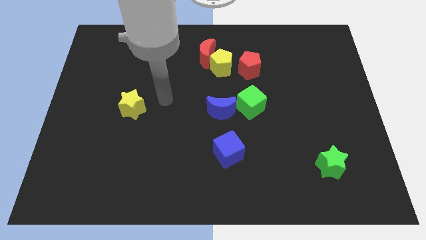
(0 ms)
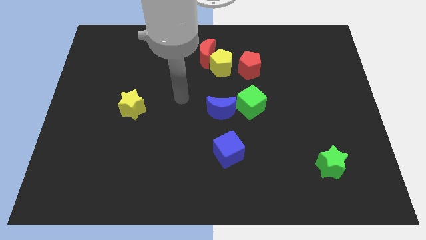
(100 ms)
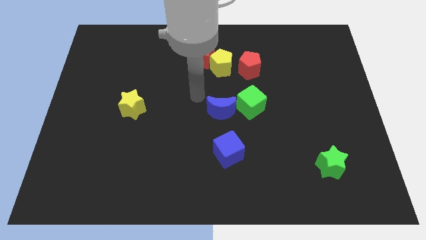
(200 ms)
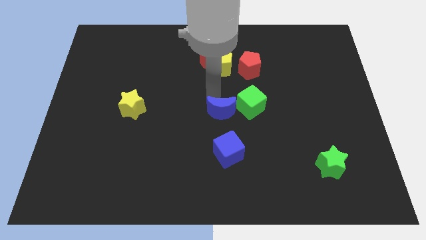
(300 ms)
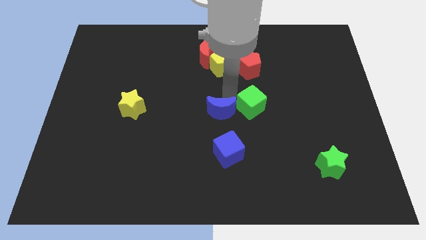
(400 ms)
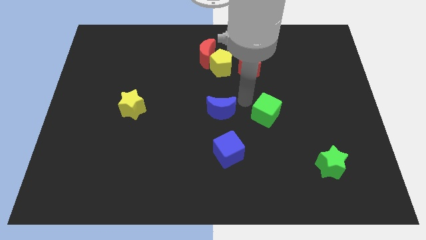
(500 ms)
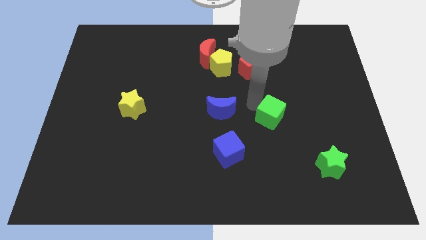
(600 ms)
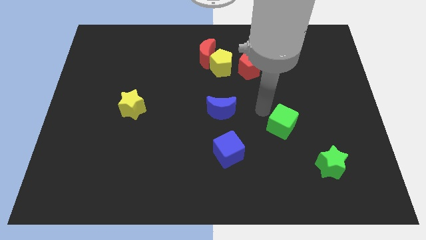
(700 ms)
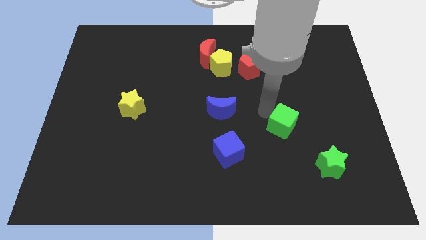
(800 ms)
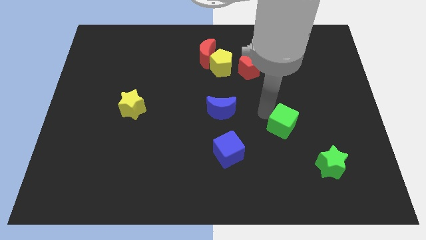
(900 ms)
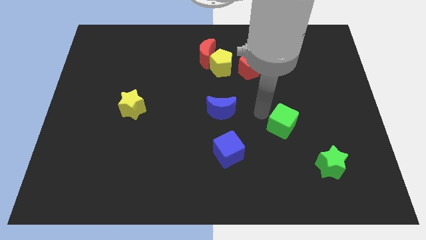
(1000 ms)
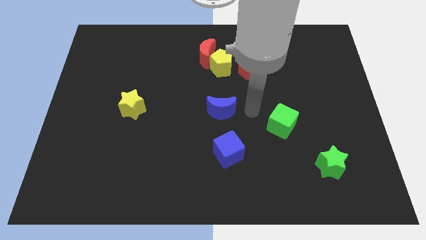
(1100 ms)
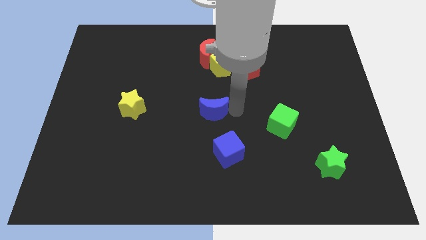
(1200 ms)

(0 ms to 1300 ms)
separate green cube with blue crescent

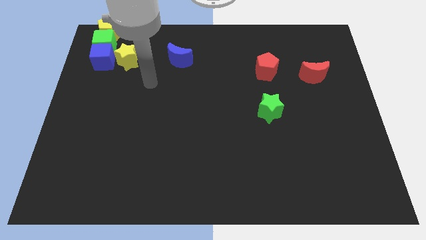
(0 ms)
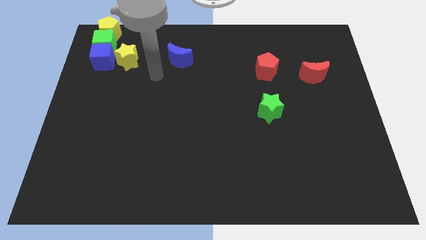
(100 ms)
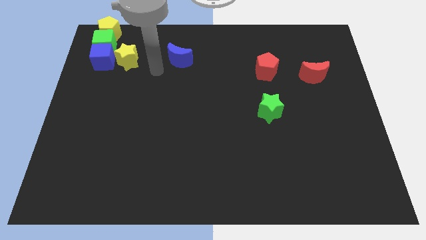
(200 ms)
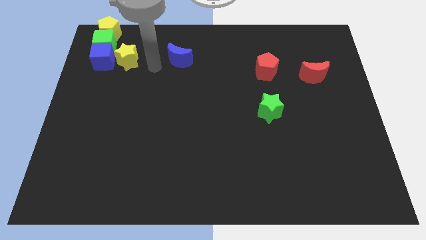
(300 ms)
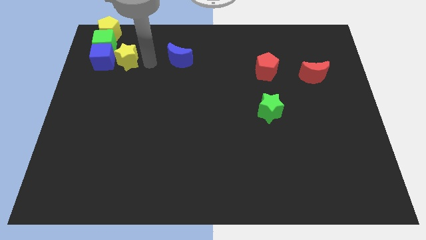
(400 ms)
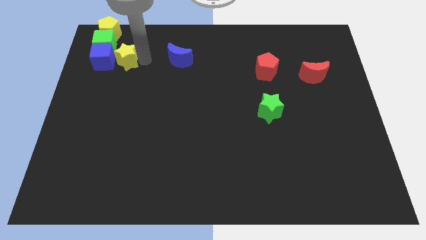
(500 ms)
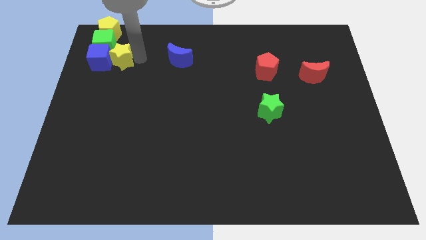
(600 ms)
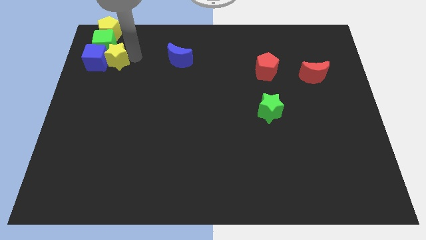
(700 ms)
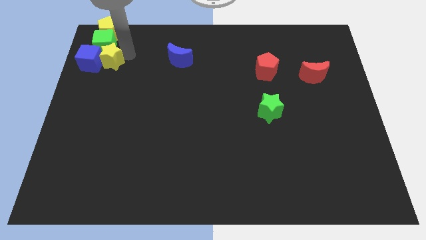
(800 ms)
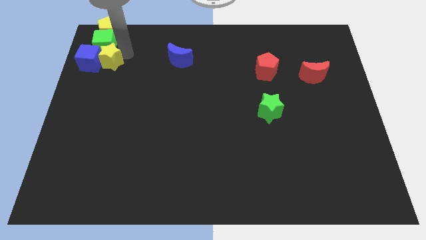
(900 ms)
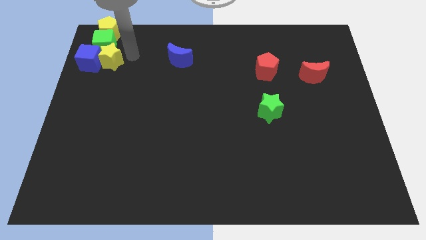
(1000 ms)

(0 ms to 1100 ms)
push the yellow star into the blue cube

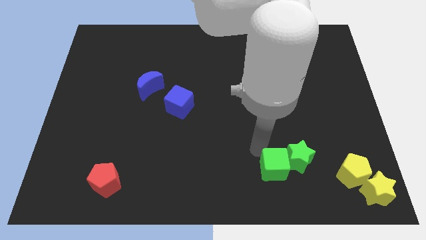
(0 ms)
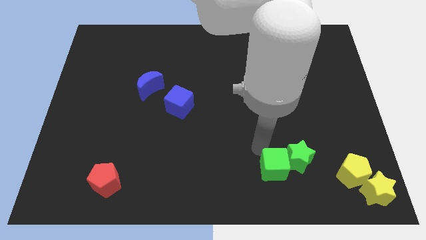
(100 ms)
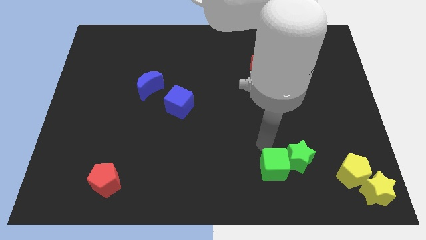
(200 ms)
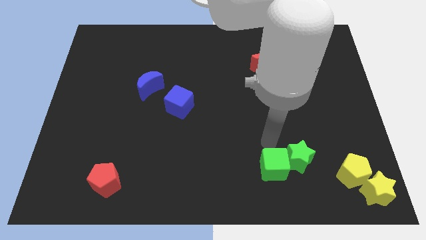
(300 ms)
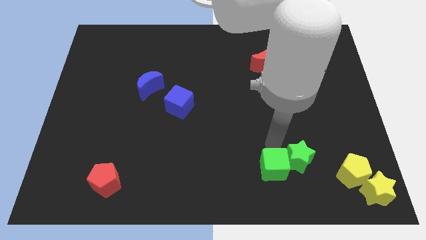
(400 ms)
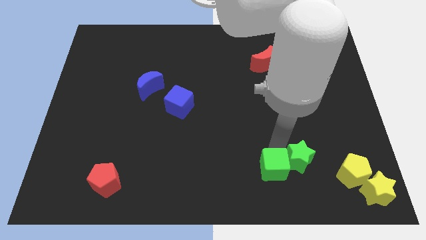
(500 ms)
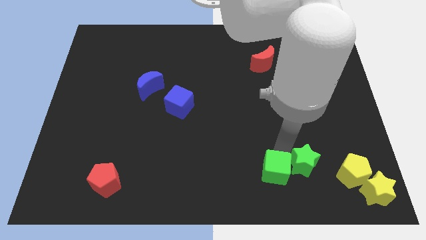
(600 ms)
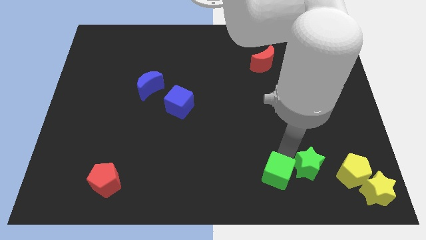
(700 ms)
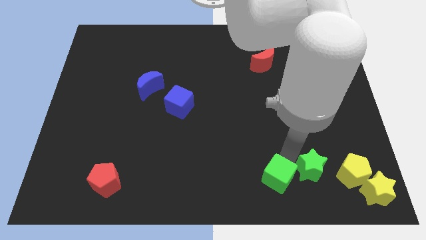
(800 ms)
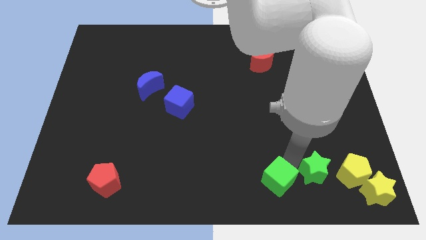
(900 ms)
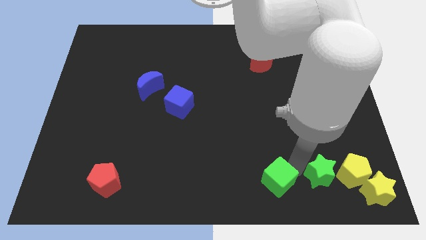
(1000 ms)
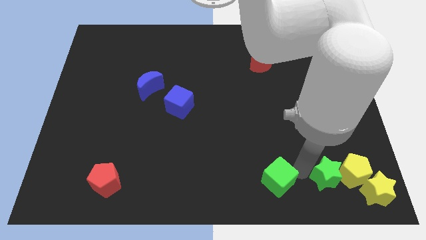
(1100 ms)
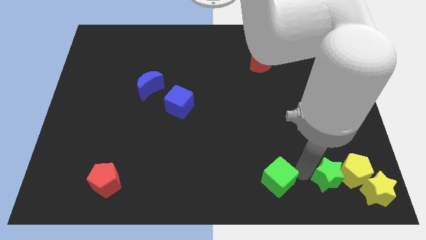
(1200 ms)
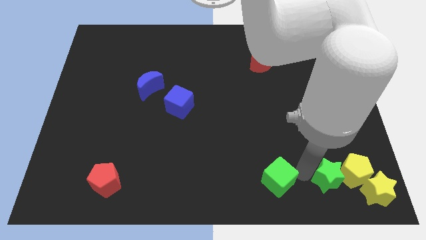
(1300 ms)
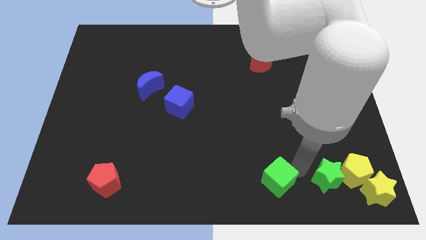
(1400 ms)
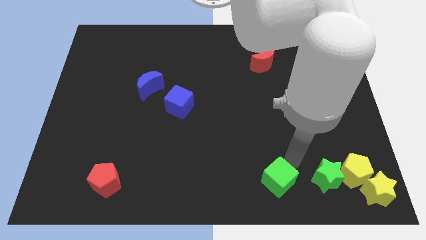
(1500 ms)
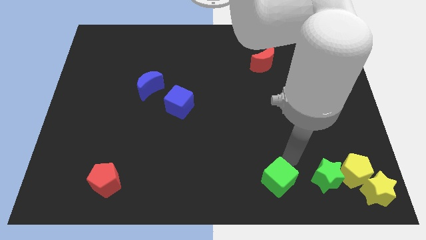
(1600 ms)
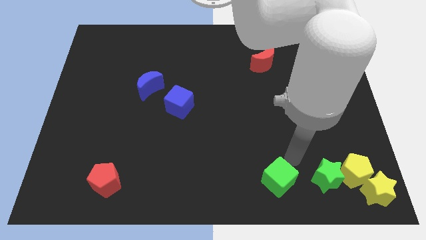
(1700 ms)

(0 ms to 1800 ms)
separate green cube from green star

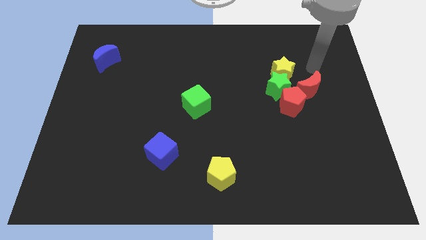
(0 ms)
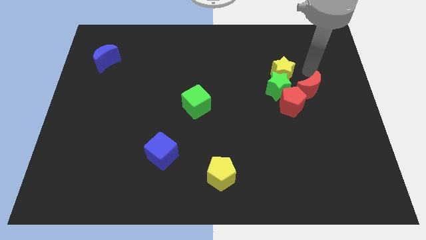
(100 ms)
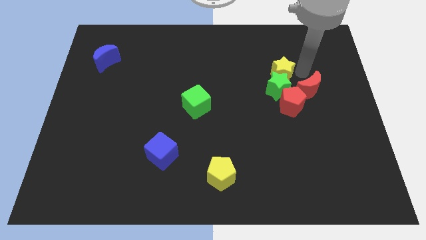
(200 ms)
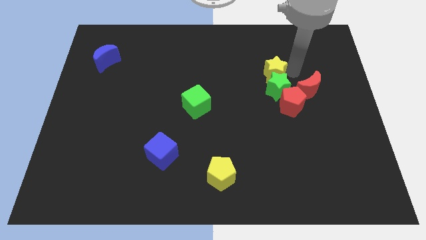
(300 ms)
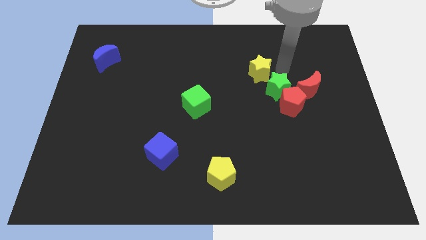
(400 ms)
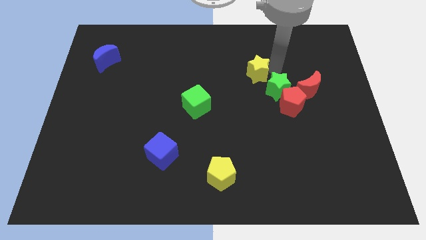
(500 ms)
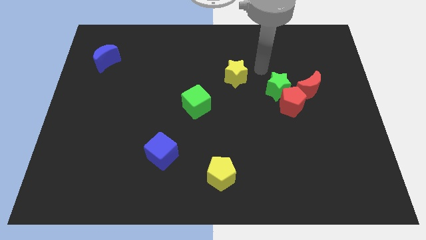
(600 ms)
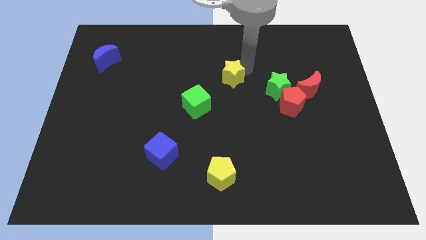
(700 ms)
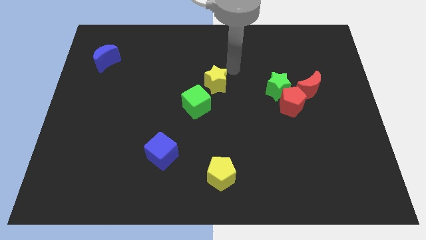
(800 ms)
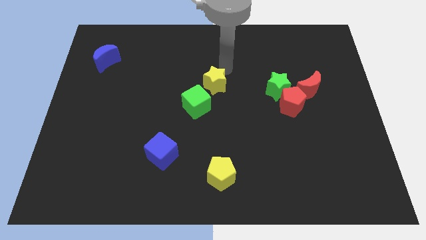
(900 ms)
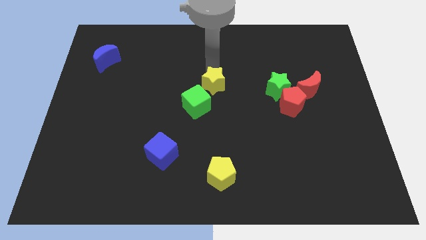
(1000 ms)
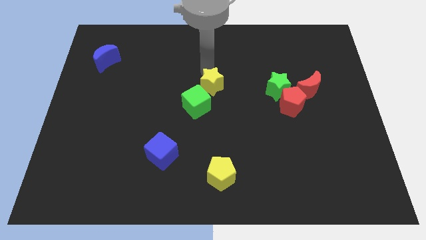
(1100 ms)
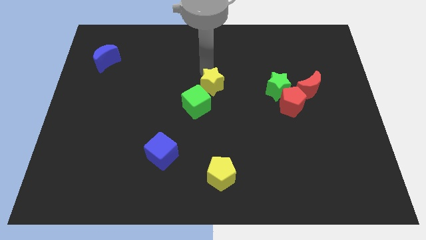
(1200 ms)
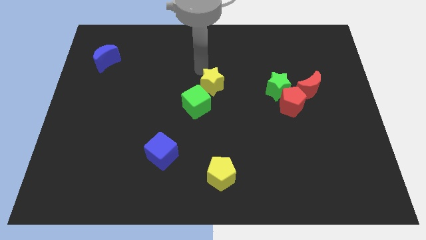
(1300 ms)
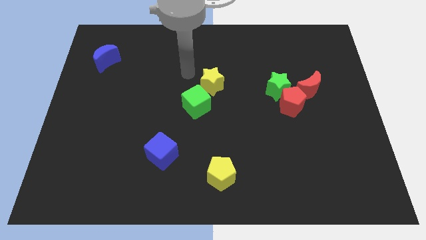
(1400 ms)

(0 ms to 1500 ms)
push the yellow star close to the green cube

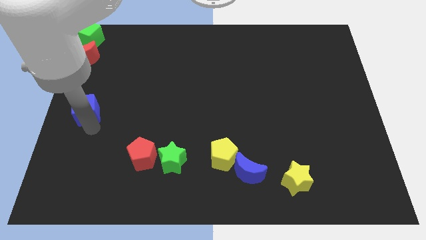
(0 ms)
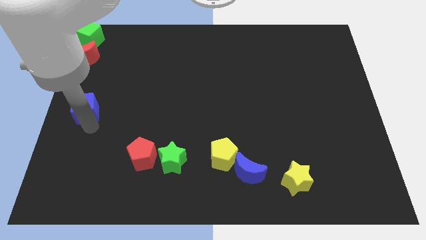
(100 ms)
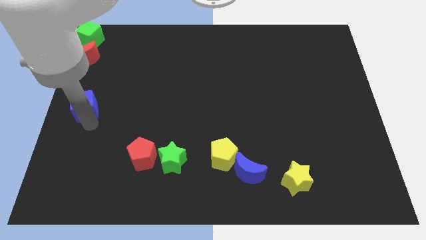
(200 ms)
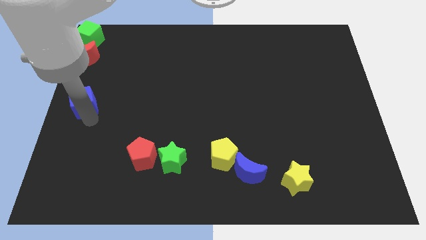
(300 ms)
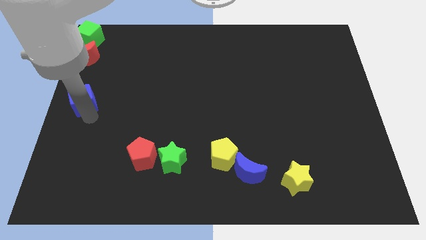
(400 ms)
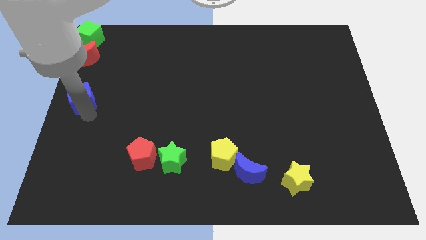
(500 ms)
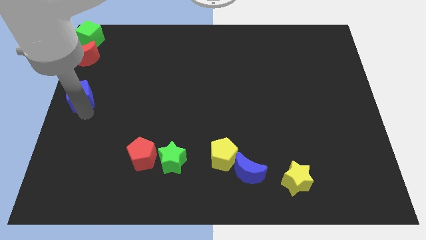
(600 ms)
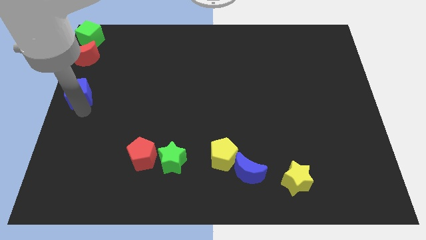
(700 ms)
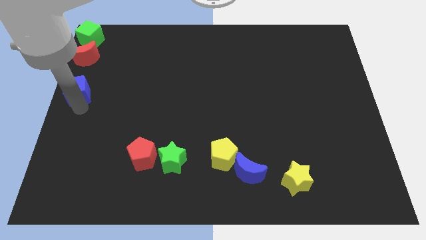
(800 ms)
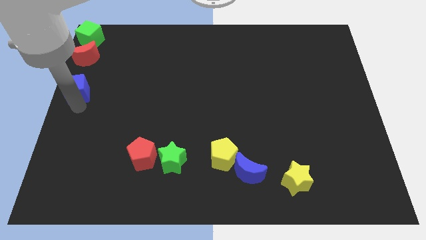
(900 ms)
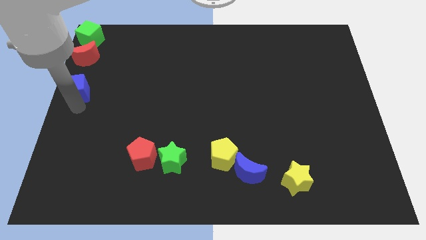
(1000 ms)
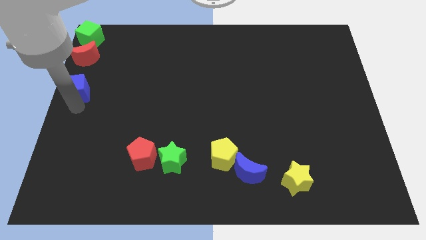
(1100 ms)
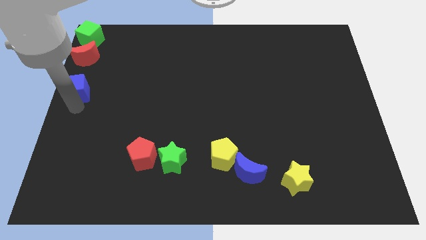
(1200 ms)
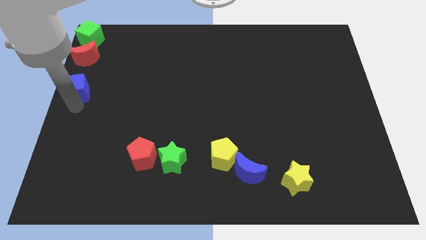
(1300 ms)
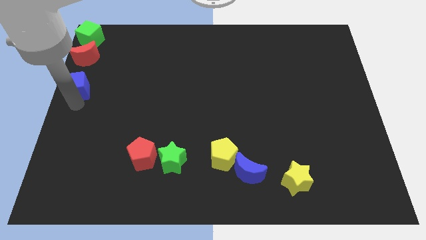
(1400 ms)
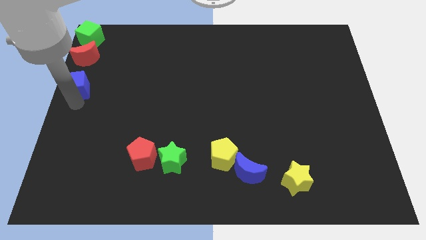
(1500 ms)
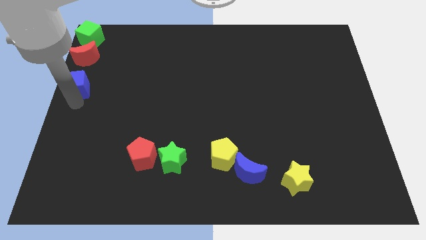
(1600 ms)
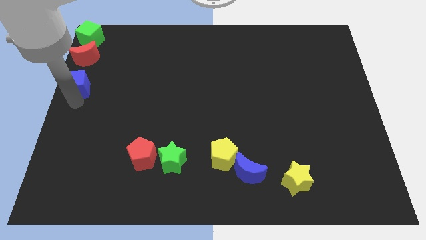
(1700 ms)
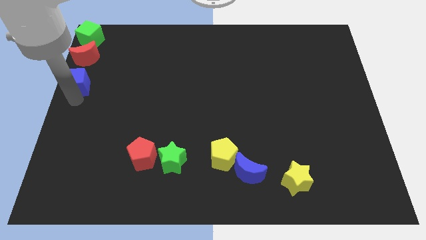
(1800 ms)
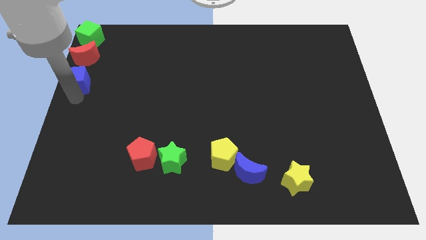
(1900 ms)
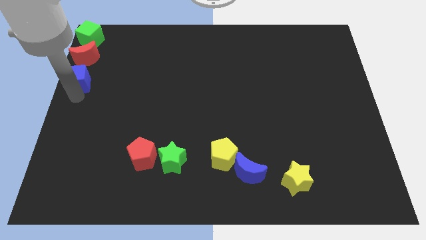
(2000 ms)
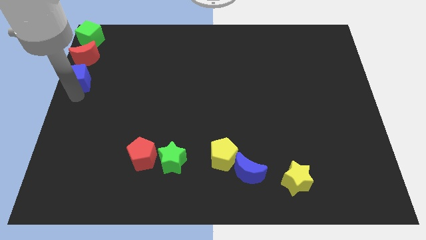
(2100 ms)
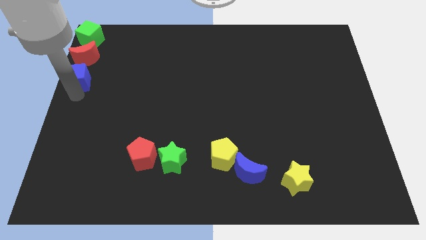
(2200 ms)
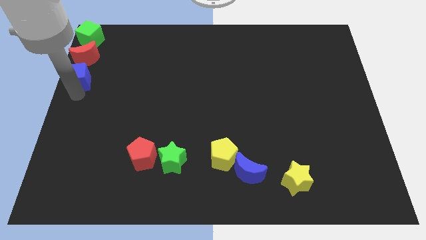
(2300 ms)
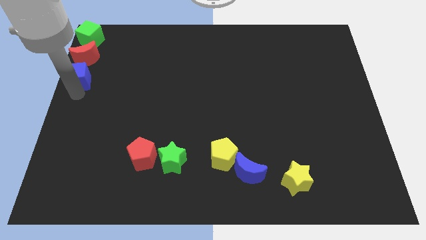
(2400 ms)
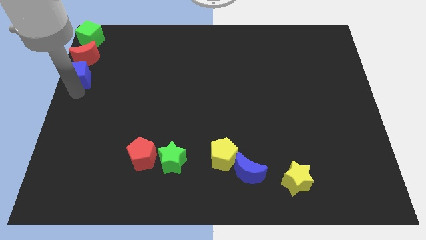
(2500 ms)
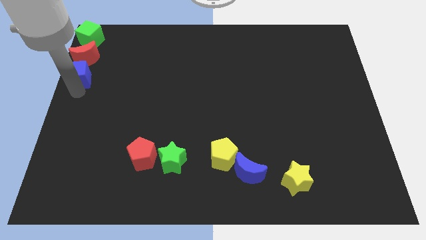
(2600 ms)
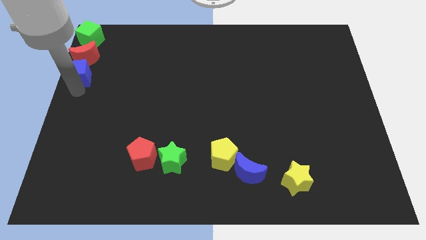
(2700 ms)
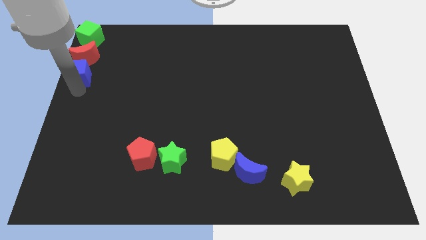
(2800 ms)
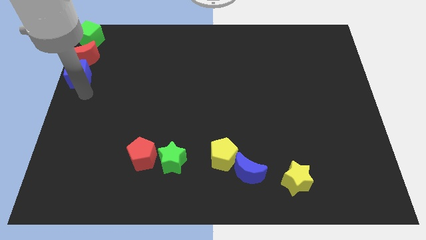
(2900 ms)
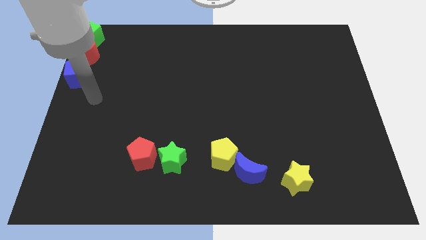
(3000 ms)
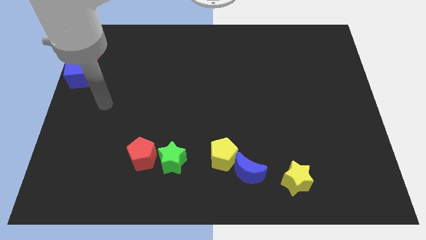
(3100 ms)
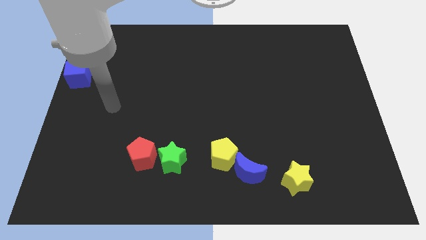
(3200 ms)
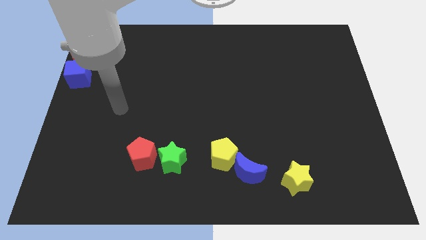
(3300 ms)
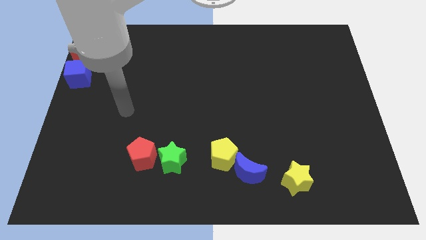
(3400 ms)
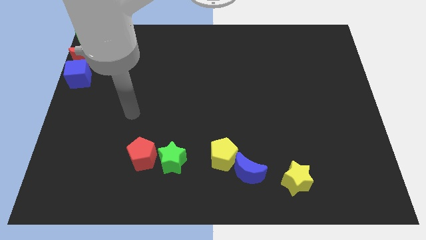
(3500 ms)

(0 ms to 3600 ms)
move the blue cube to the bottom side of the red moon
